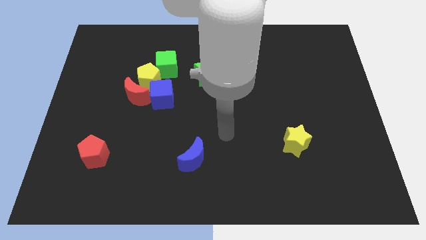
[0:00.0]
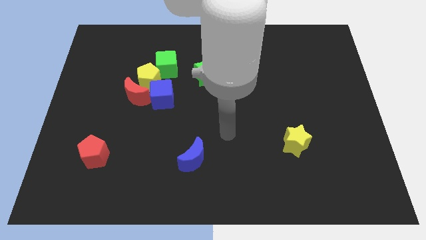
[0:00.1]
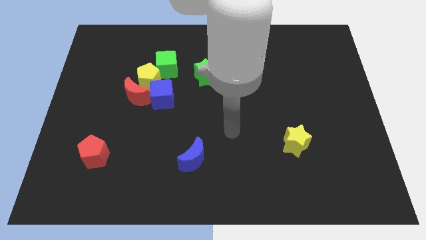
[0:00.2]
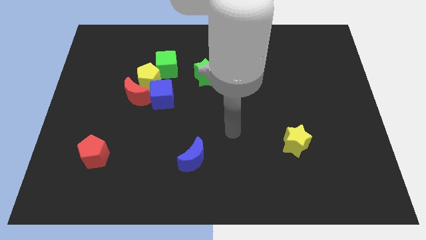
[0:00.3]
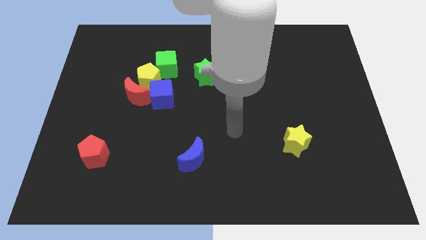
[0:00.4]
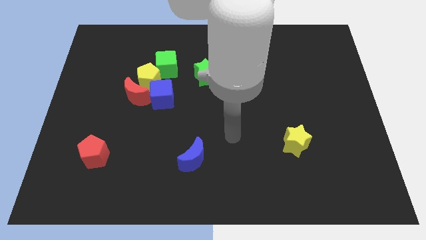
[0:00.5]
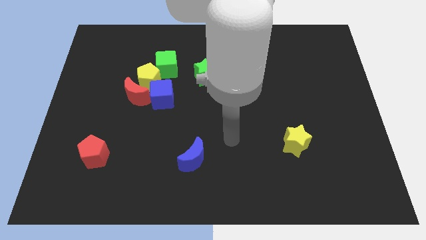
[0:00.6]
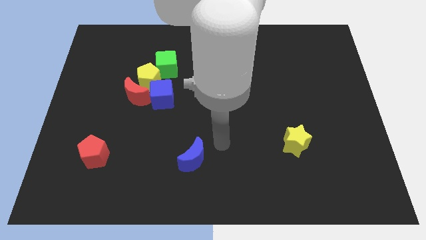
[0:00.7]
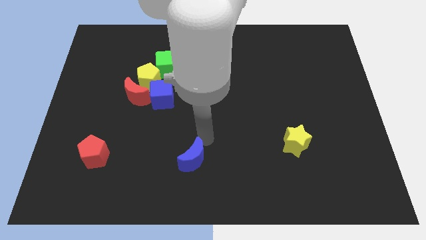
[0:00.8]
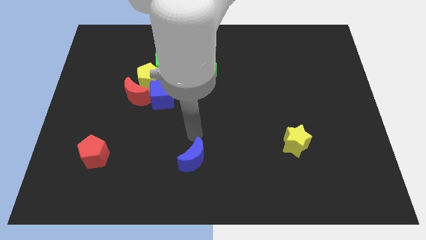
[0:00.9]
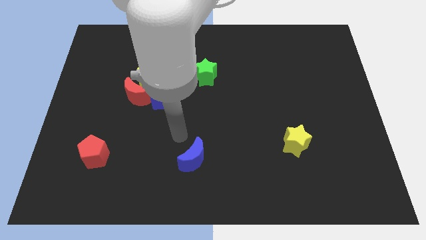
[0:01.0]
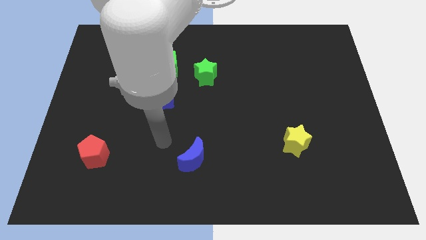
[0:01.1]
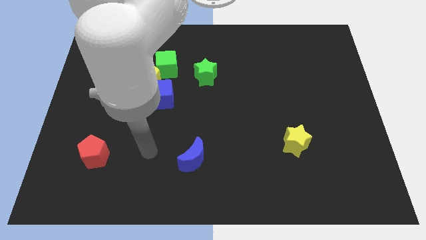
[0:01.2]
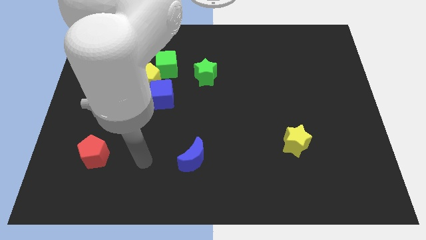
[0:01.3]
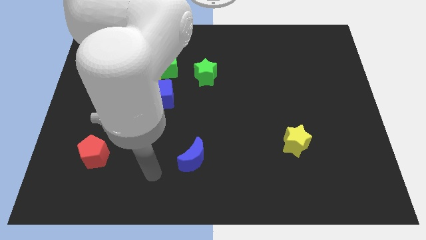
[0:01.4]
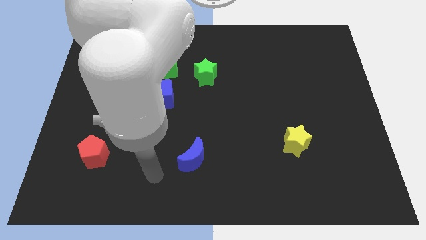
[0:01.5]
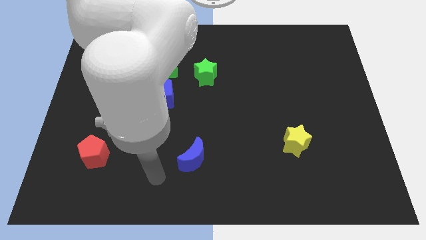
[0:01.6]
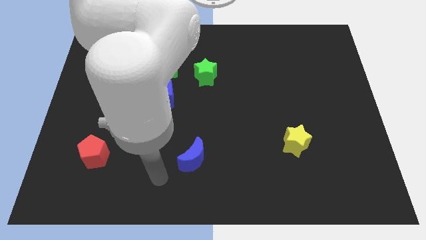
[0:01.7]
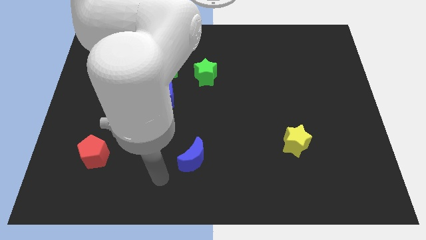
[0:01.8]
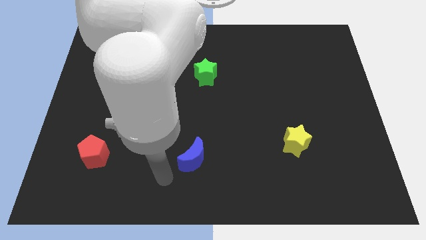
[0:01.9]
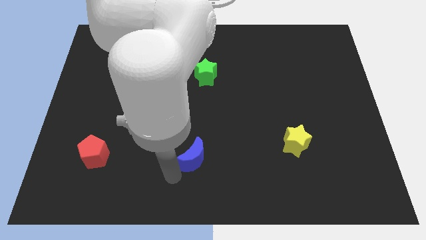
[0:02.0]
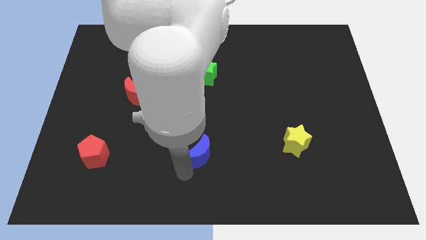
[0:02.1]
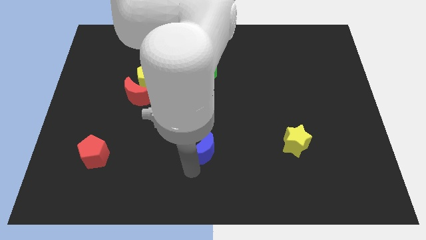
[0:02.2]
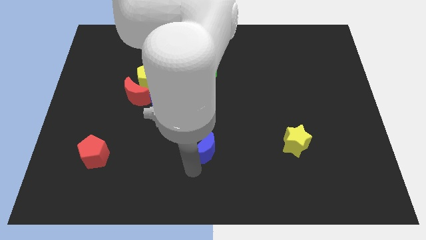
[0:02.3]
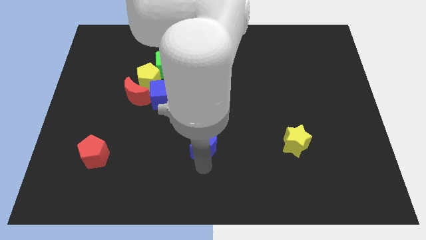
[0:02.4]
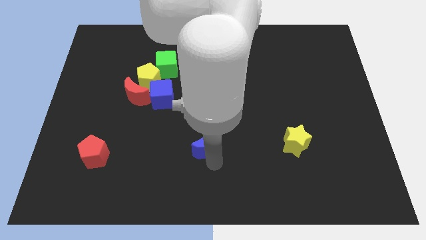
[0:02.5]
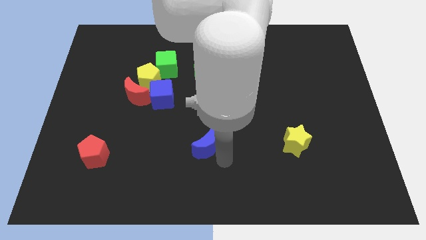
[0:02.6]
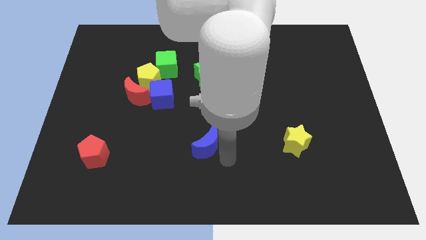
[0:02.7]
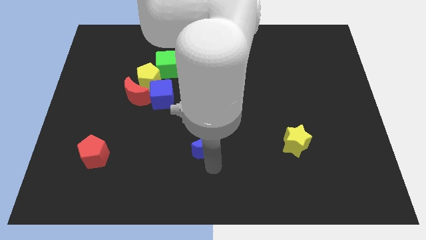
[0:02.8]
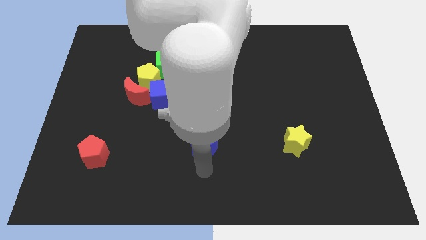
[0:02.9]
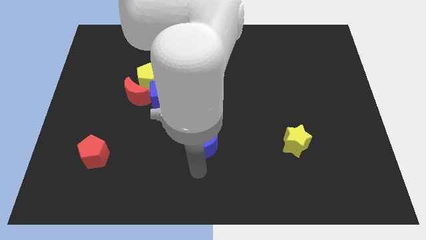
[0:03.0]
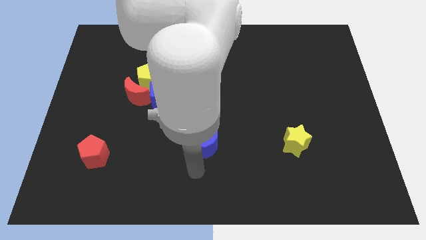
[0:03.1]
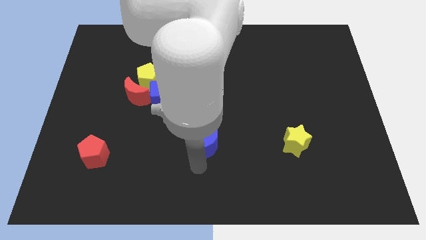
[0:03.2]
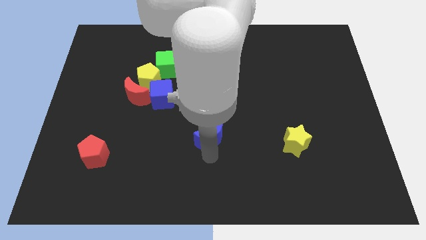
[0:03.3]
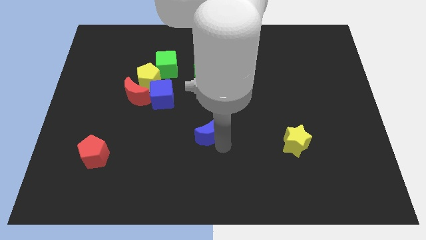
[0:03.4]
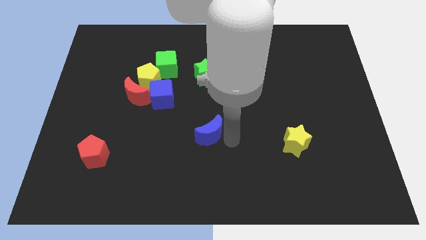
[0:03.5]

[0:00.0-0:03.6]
move the blue crescent towards blue cube

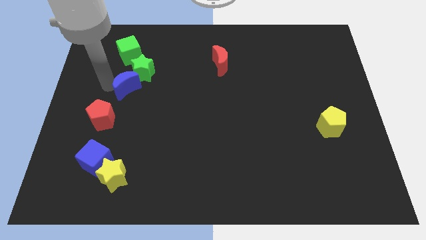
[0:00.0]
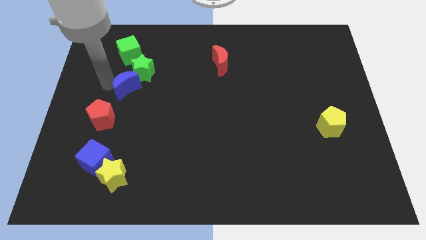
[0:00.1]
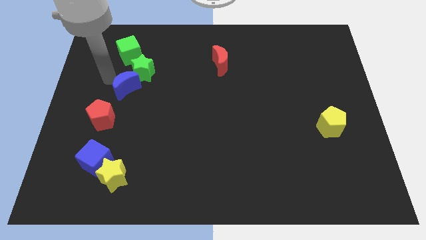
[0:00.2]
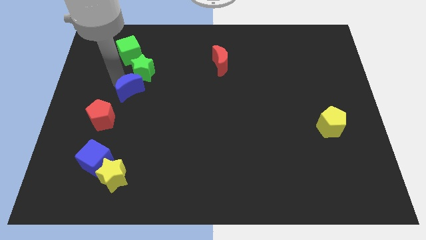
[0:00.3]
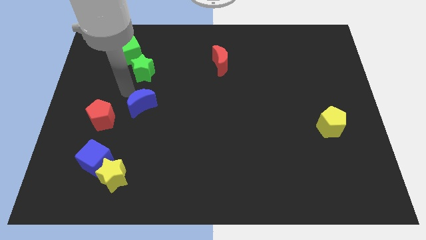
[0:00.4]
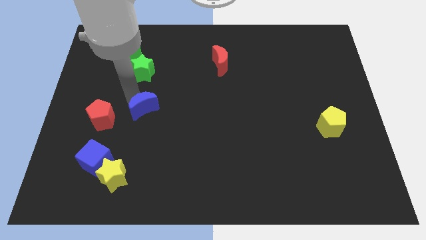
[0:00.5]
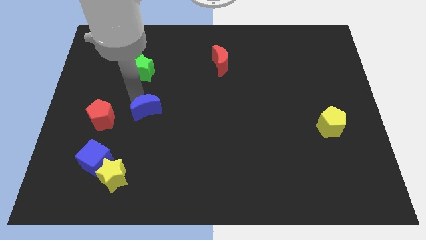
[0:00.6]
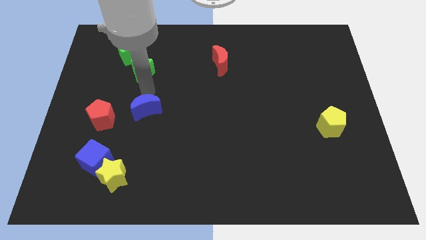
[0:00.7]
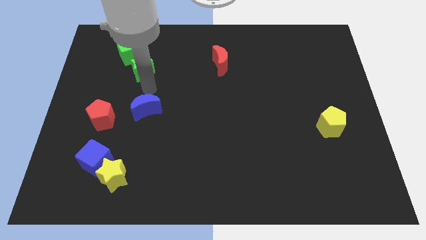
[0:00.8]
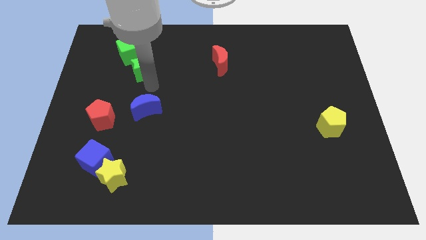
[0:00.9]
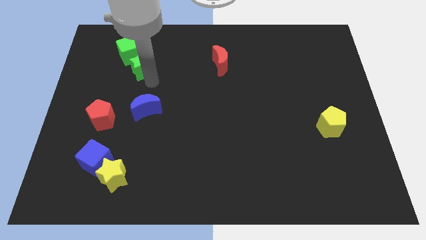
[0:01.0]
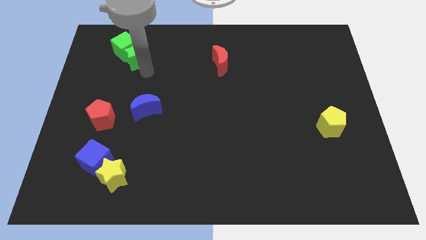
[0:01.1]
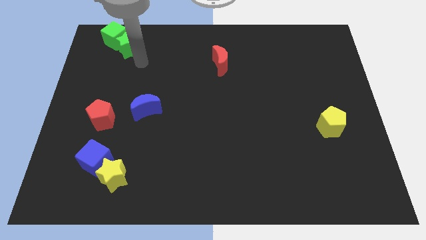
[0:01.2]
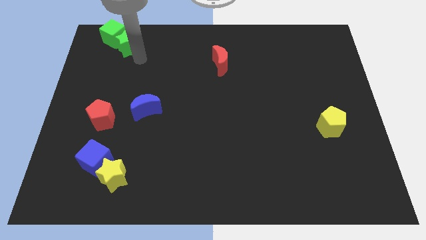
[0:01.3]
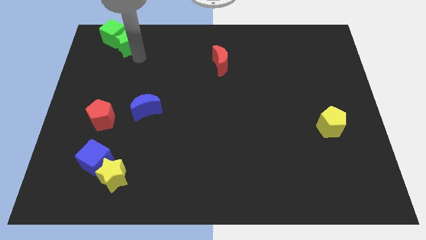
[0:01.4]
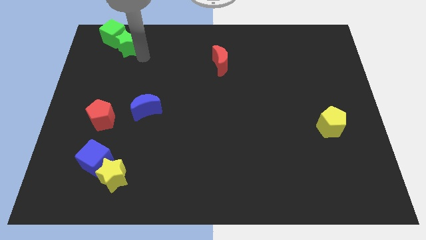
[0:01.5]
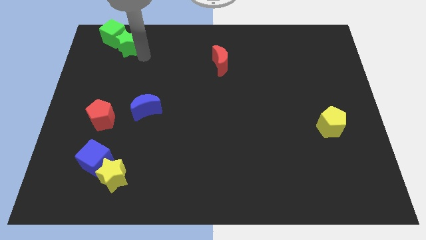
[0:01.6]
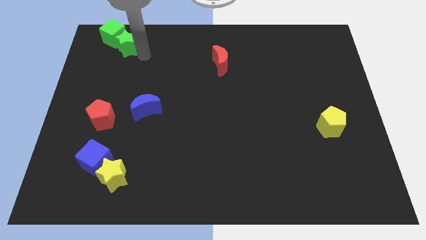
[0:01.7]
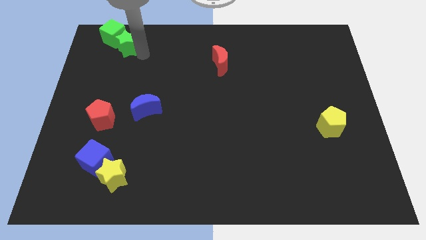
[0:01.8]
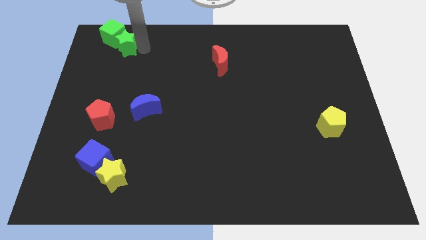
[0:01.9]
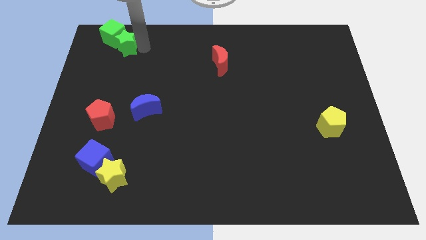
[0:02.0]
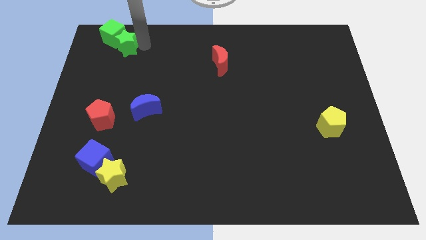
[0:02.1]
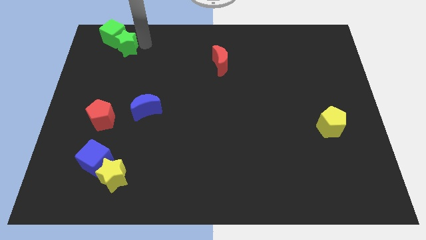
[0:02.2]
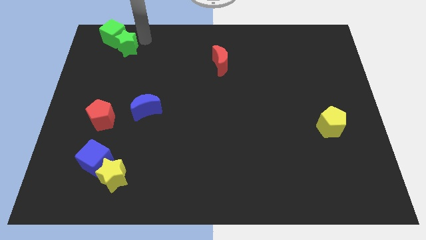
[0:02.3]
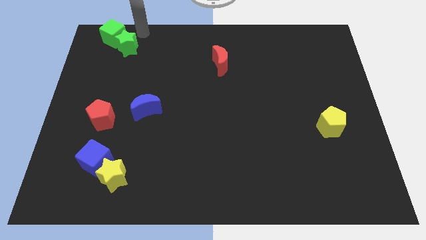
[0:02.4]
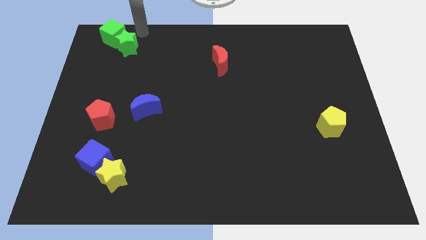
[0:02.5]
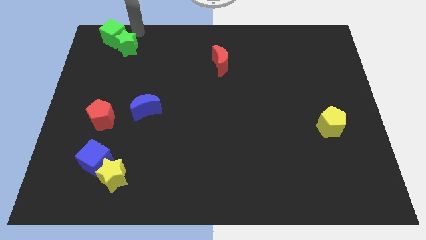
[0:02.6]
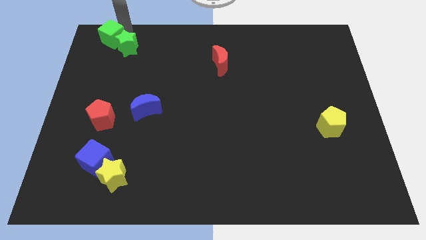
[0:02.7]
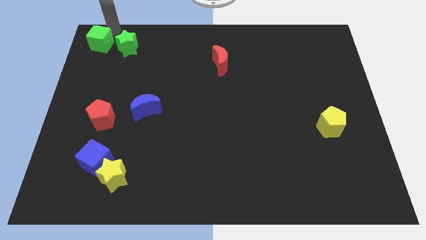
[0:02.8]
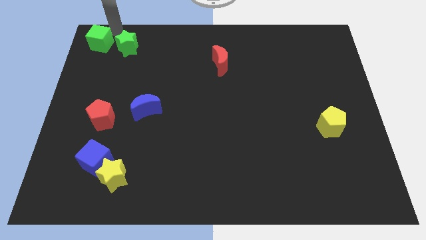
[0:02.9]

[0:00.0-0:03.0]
move the green blocks towards the top left corner of the board
